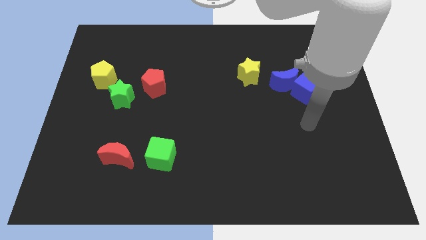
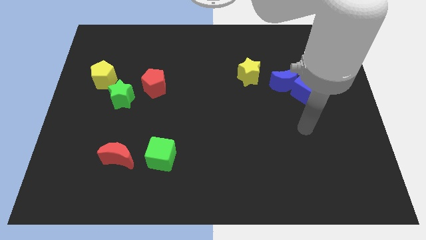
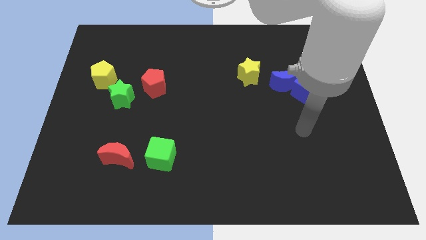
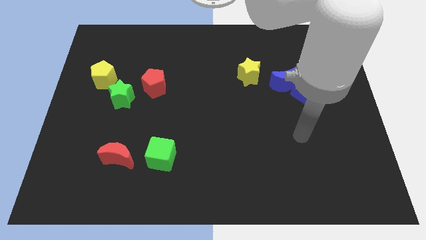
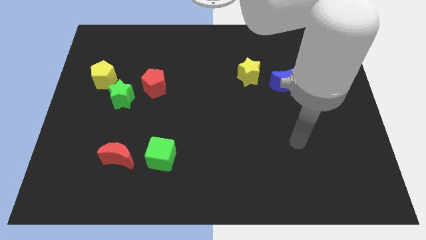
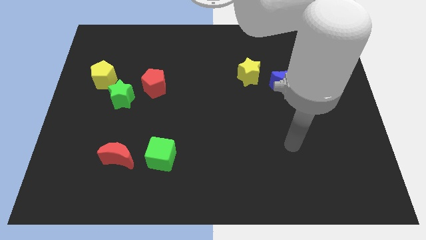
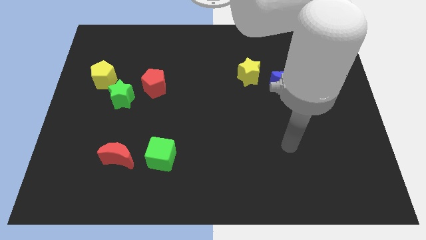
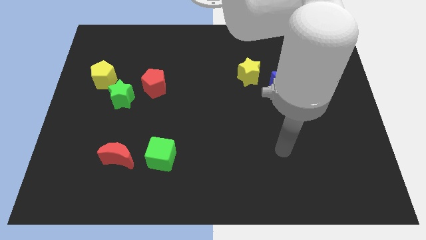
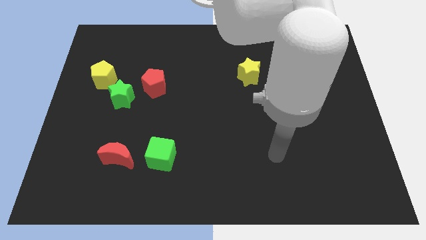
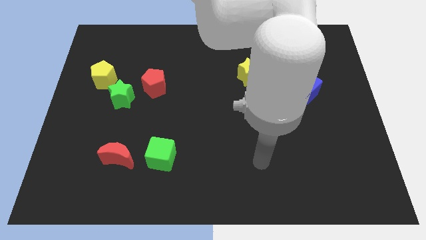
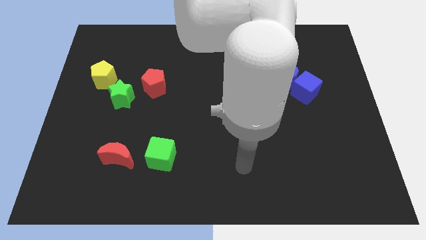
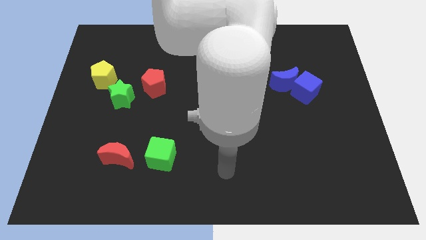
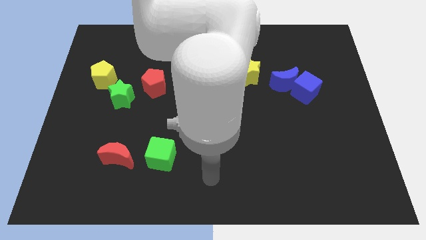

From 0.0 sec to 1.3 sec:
move your arm away from the blue cube

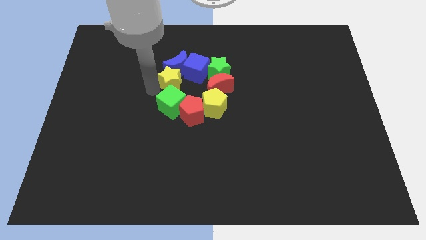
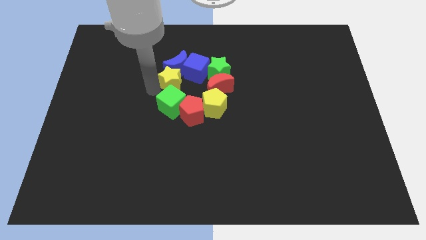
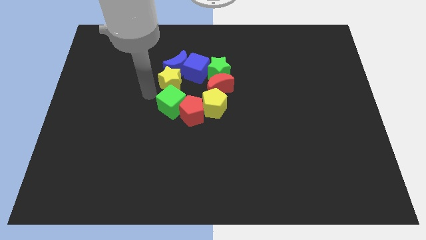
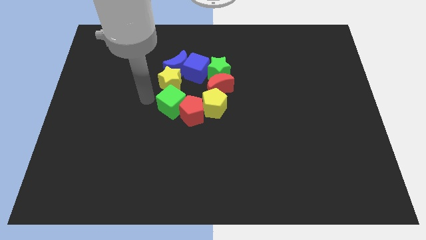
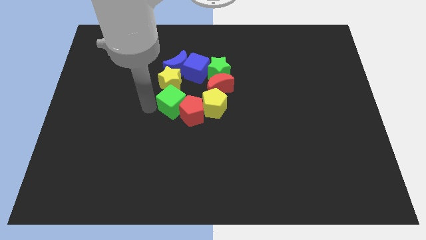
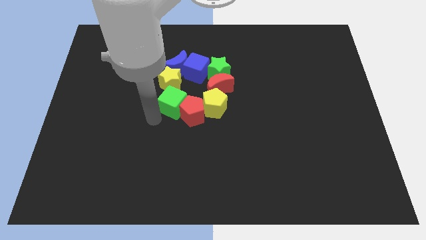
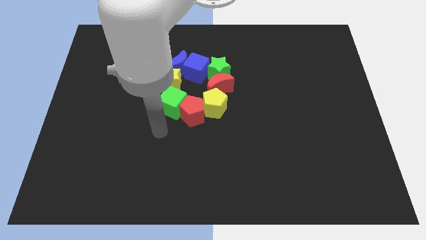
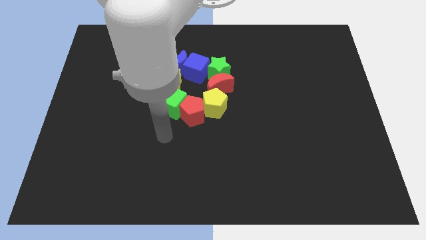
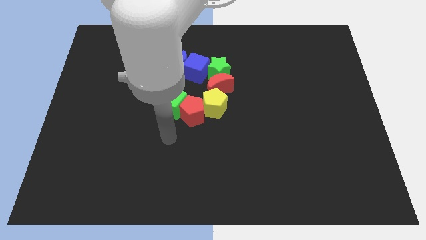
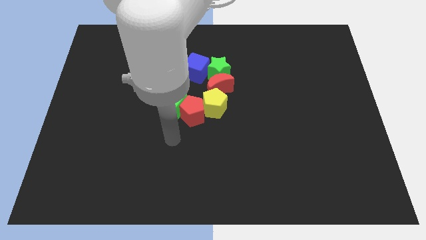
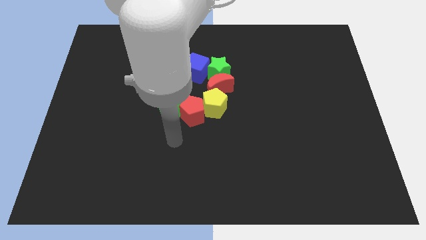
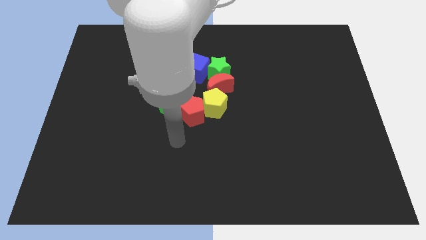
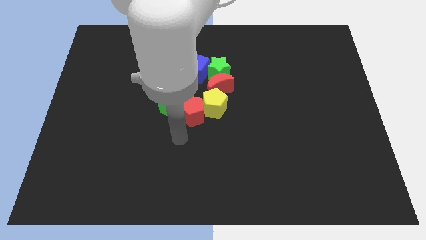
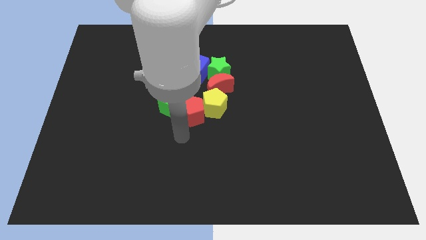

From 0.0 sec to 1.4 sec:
move the arm towards the red pentagon

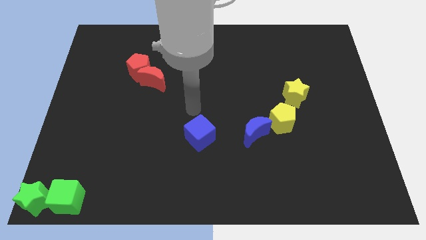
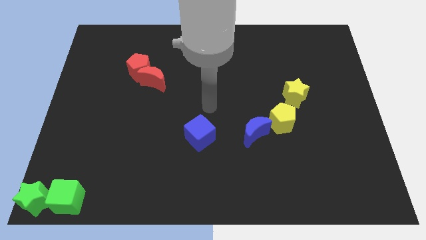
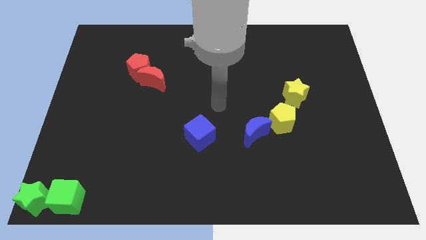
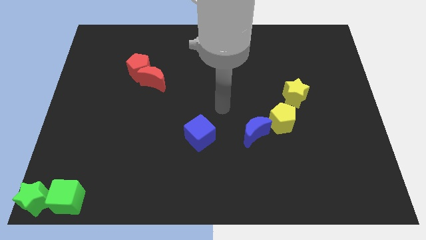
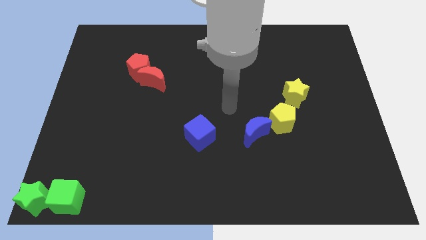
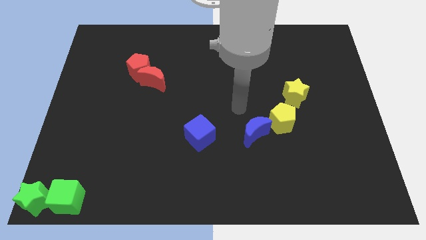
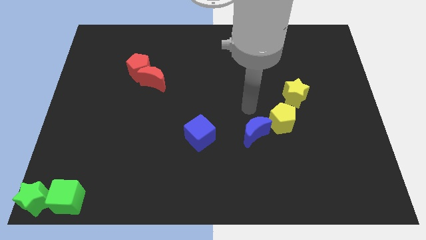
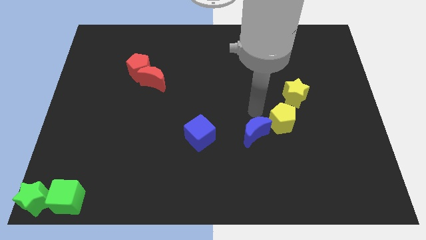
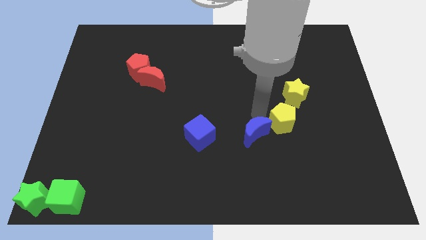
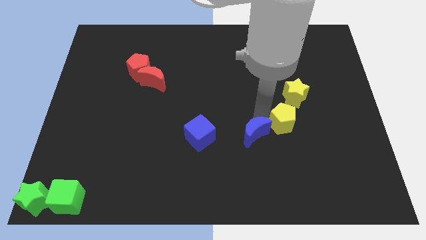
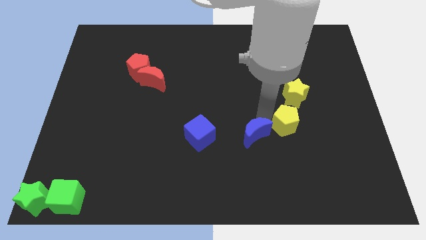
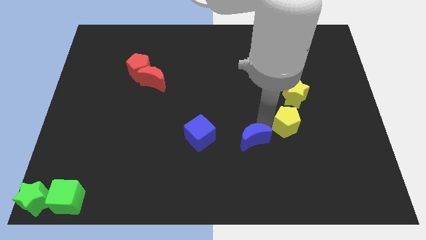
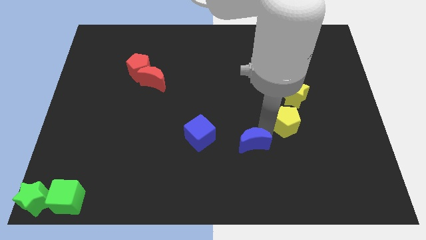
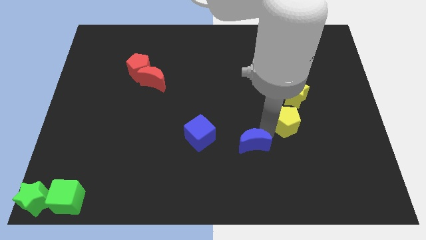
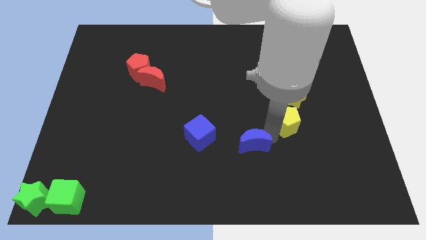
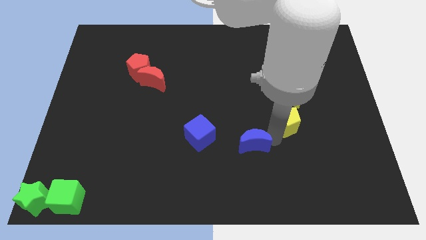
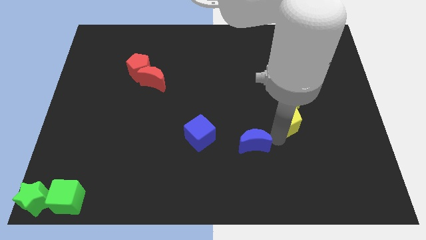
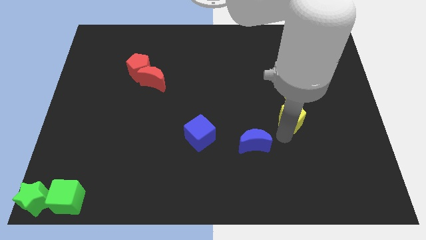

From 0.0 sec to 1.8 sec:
move your arm towards the blue moon

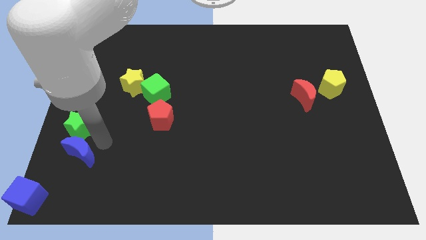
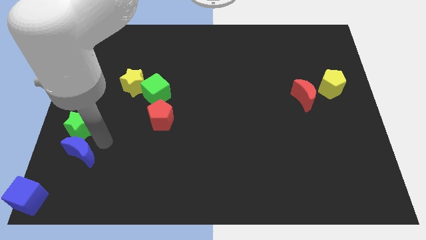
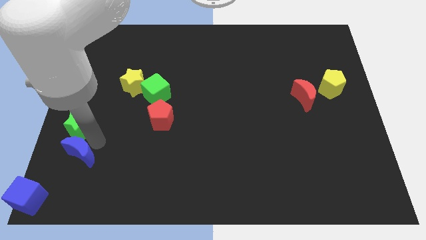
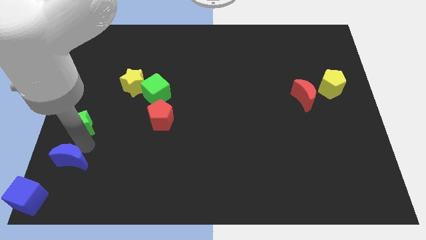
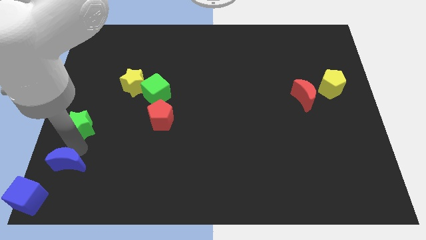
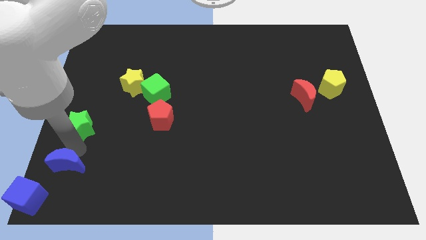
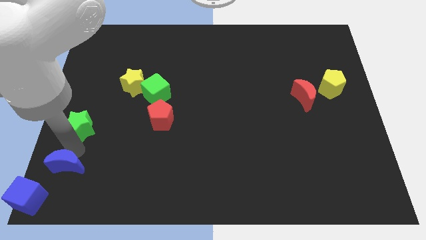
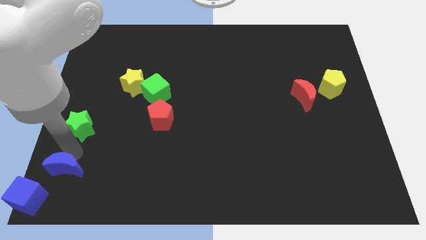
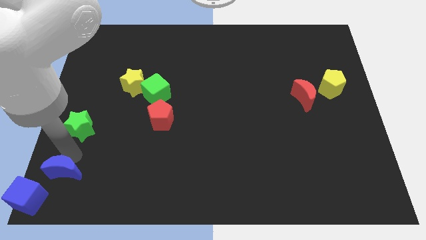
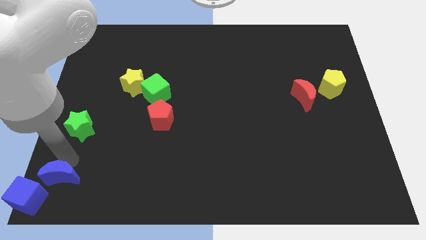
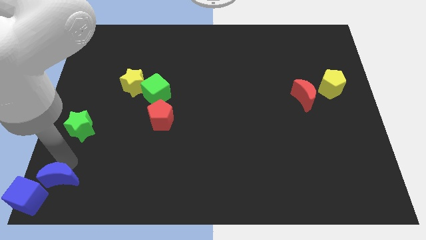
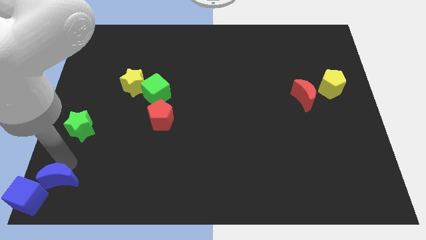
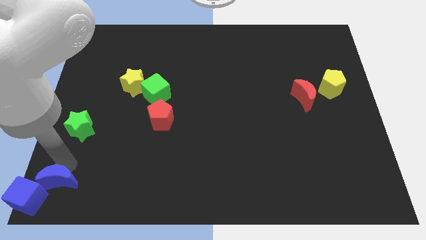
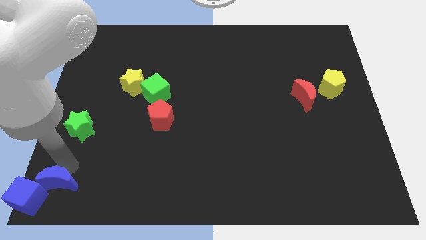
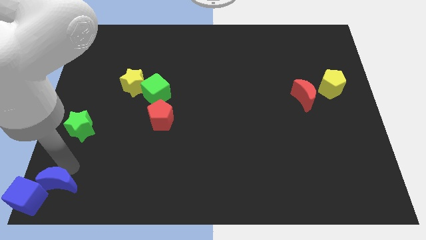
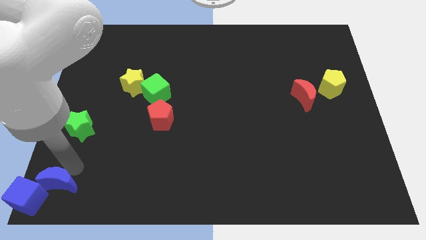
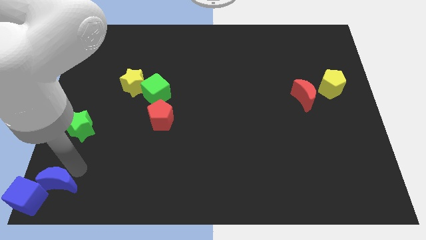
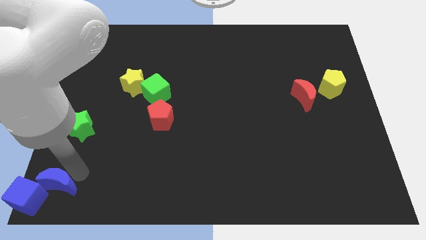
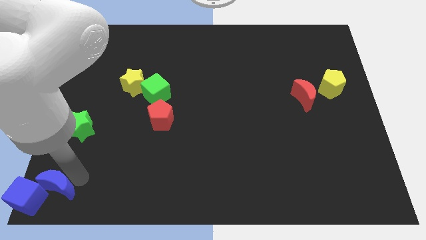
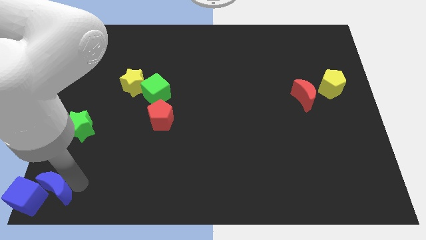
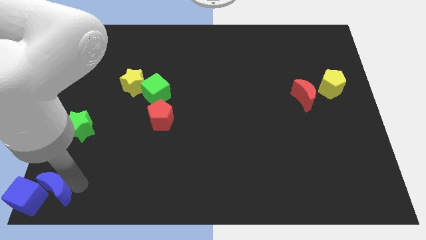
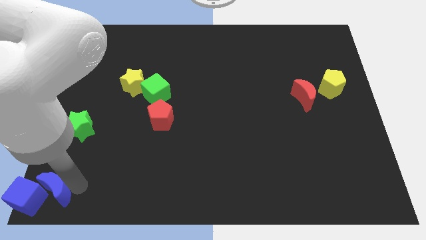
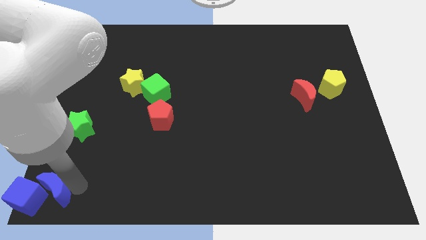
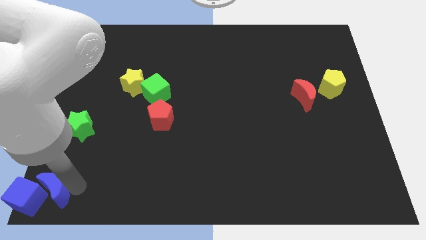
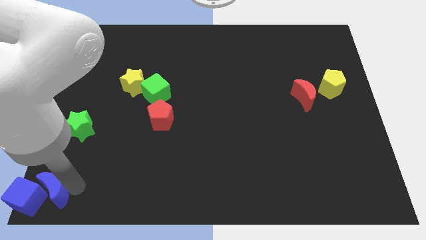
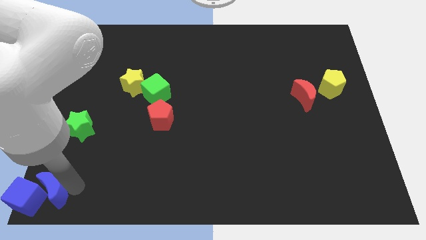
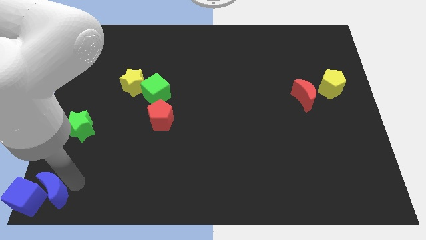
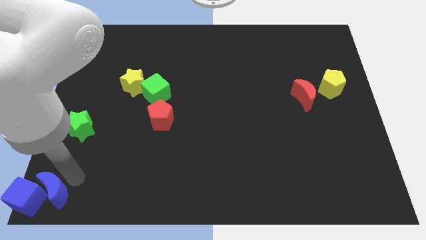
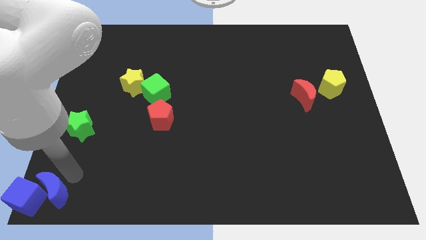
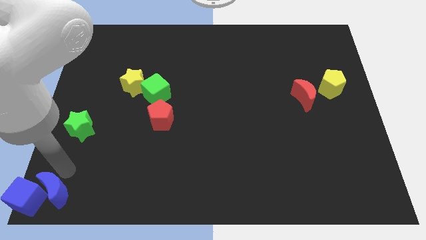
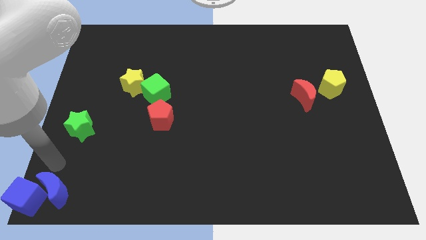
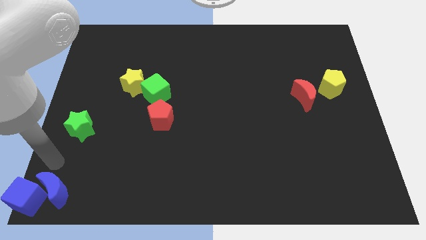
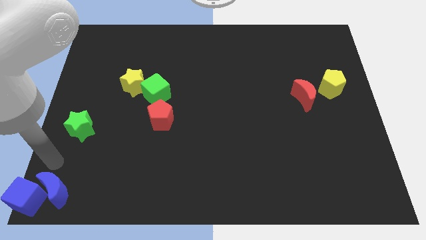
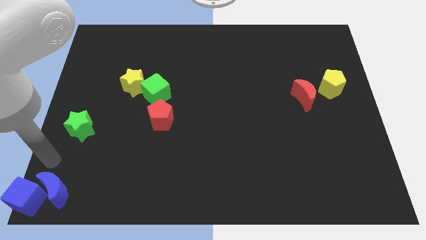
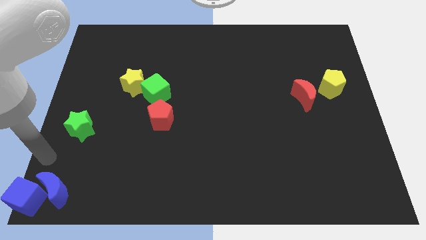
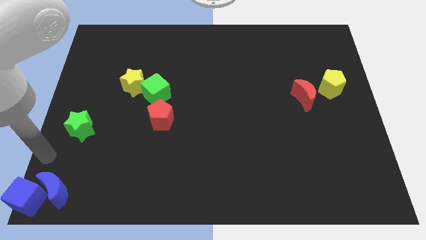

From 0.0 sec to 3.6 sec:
push blue crescent into blue cube

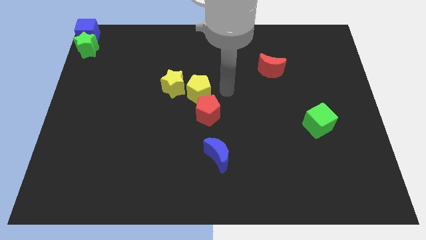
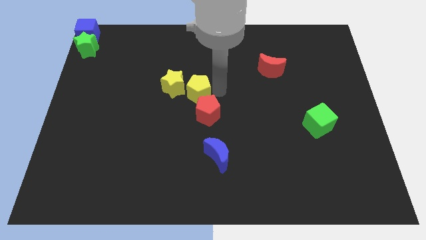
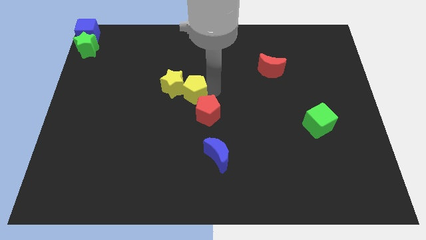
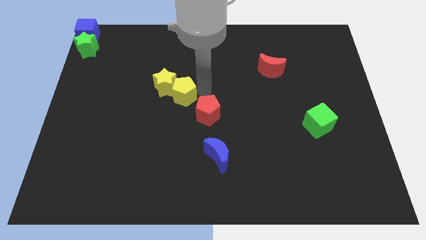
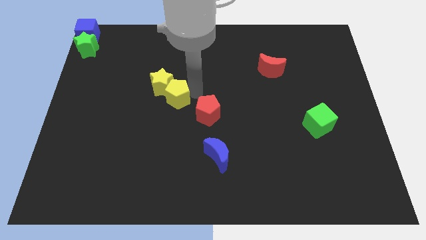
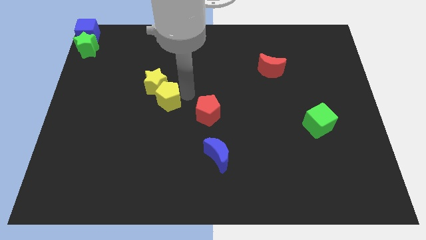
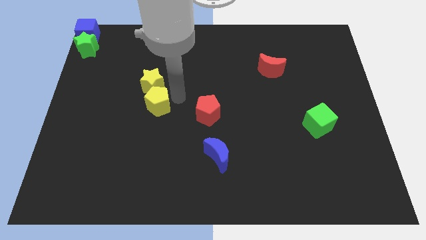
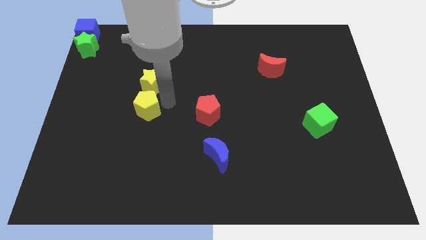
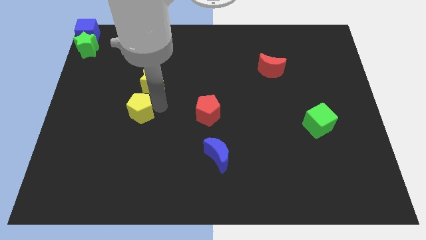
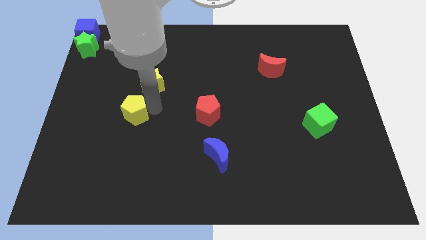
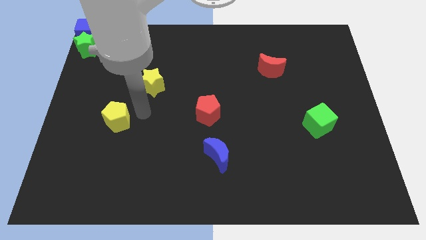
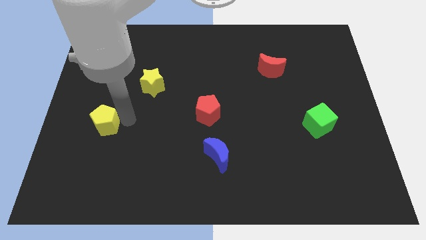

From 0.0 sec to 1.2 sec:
push the yellow pentagon into the yellow star
